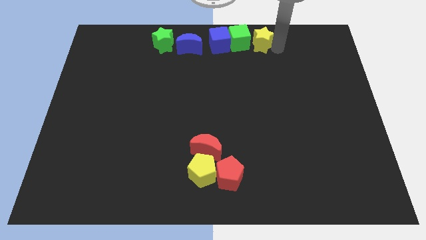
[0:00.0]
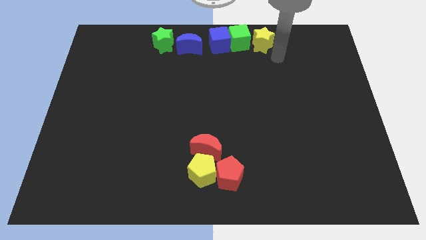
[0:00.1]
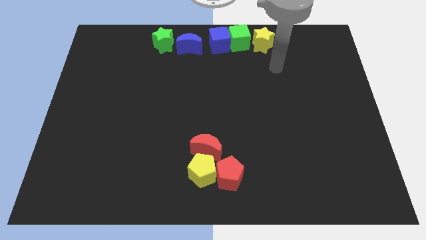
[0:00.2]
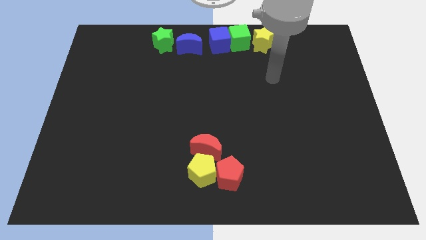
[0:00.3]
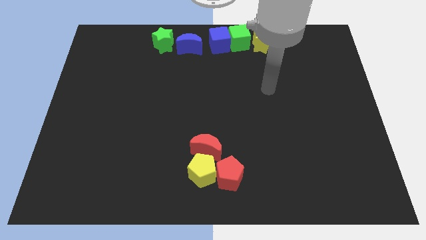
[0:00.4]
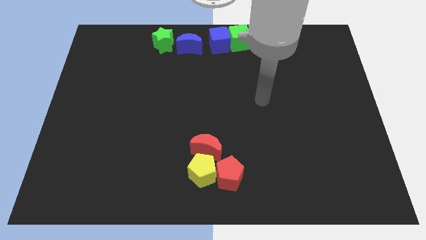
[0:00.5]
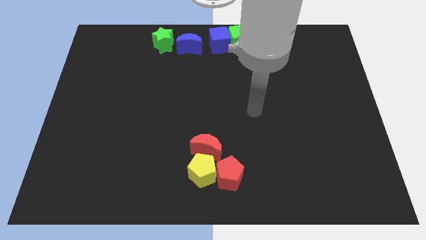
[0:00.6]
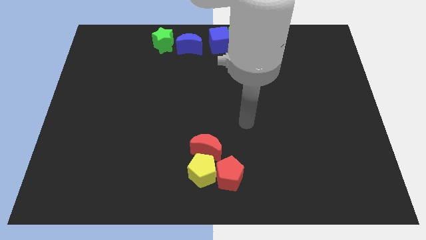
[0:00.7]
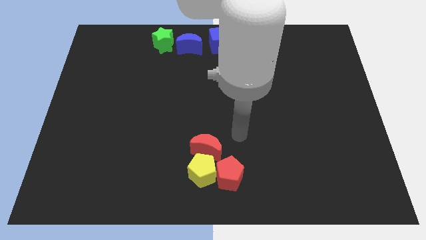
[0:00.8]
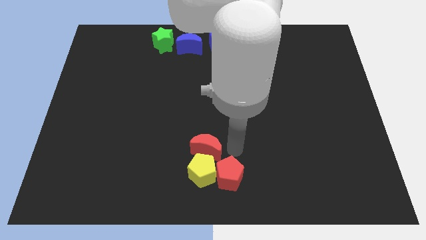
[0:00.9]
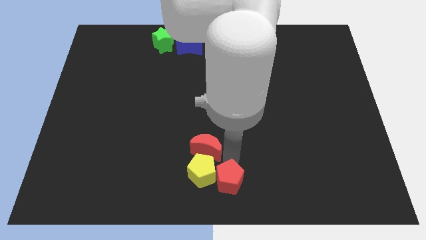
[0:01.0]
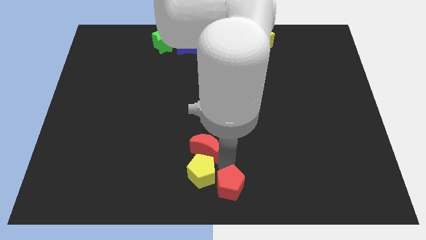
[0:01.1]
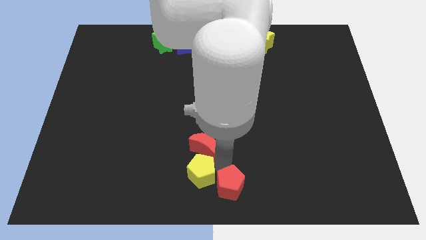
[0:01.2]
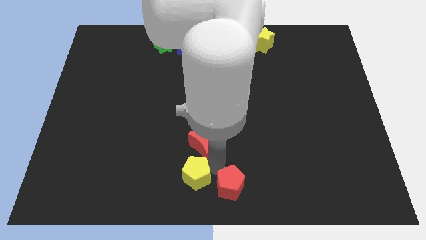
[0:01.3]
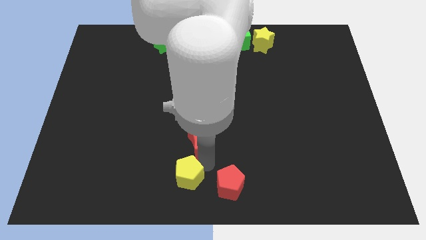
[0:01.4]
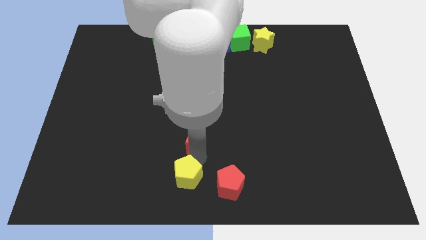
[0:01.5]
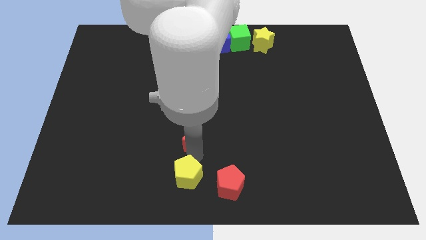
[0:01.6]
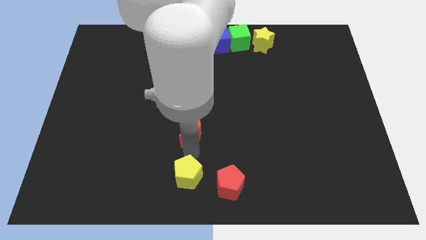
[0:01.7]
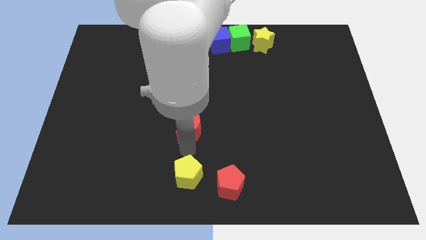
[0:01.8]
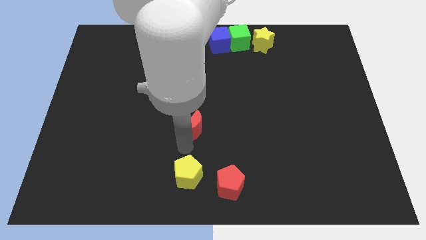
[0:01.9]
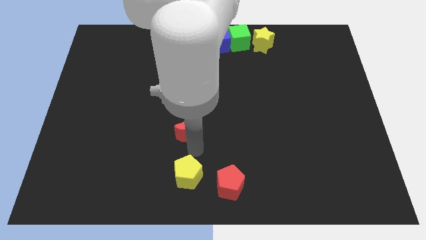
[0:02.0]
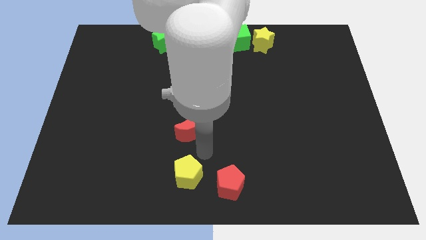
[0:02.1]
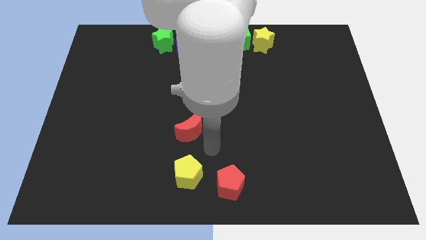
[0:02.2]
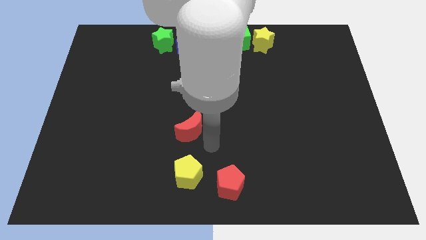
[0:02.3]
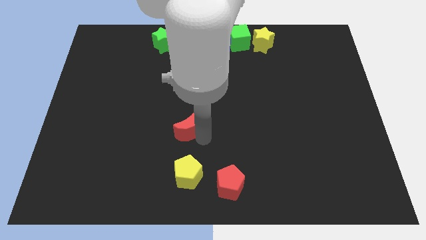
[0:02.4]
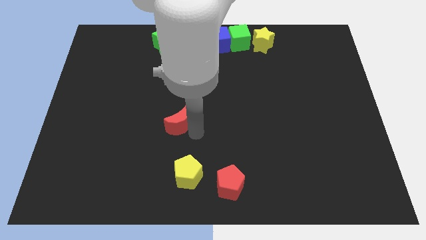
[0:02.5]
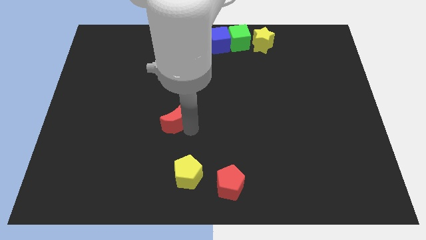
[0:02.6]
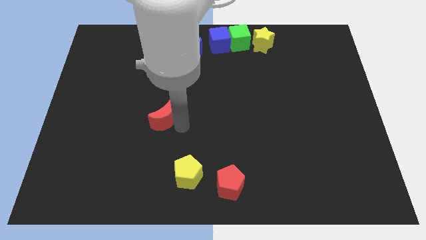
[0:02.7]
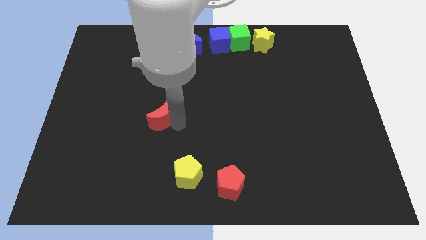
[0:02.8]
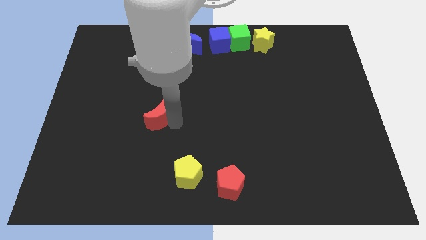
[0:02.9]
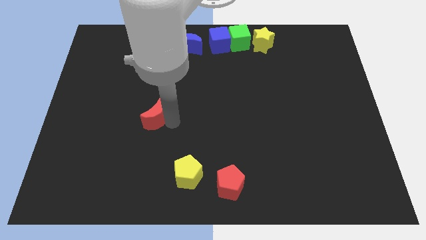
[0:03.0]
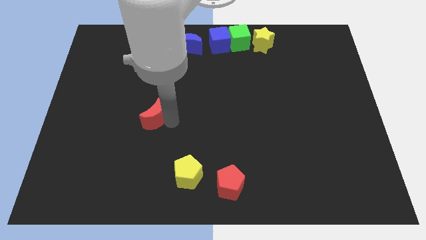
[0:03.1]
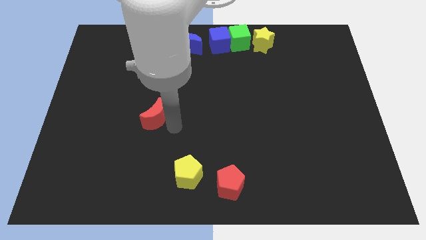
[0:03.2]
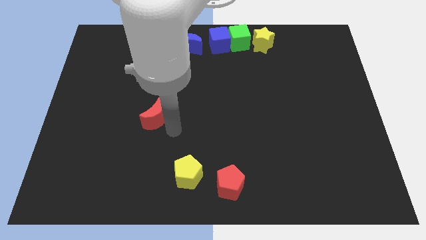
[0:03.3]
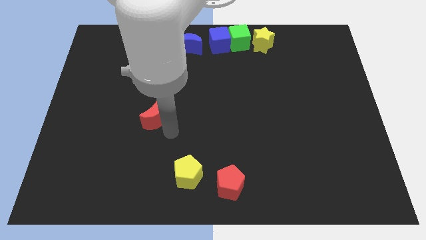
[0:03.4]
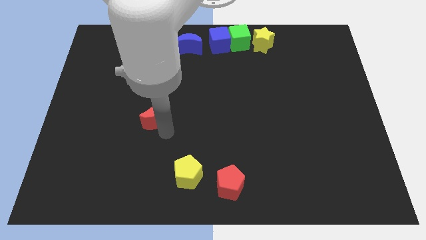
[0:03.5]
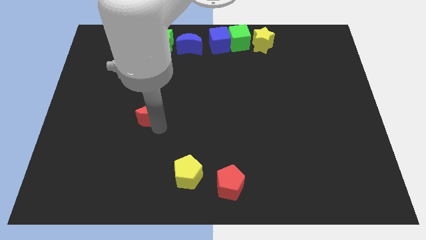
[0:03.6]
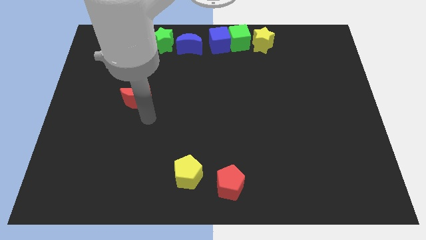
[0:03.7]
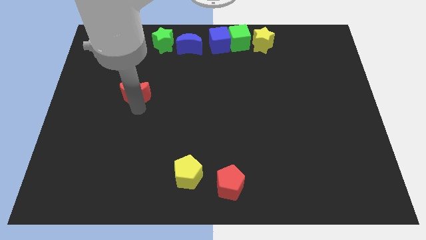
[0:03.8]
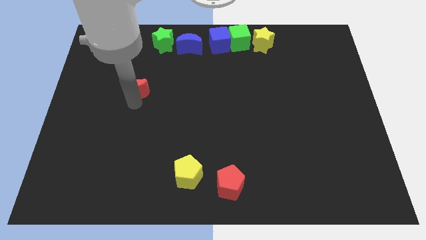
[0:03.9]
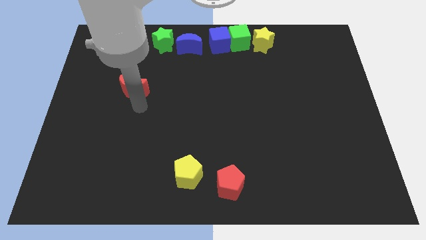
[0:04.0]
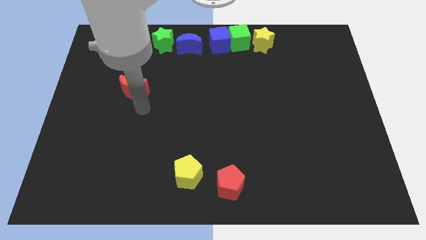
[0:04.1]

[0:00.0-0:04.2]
move the red crescent away from the group of blocks

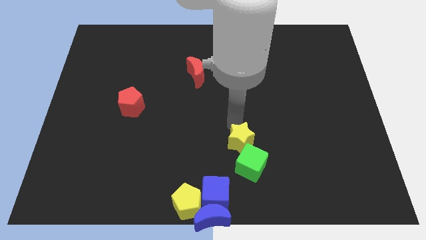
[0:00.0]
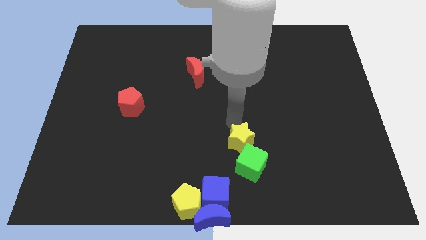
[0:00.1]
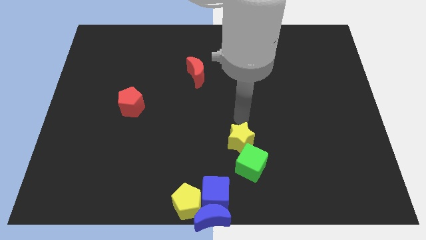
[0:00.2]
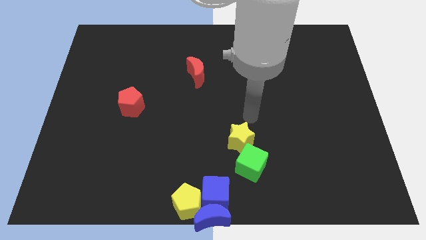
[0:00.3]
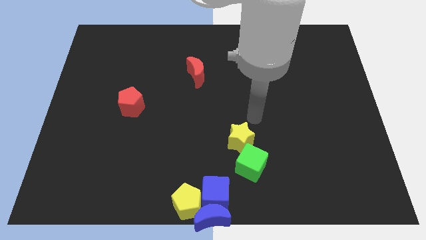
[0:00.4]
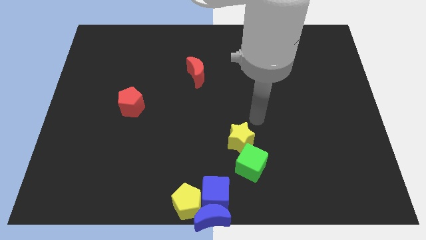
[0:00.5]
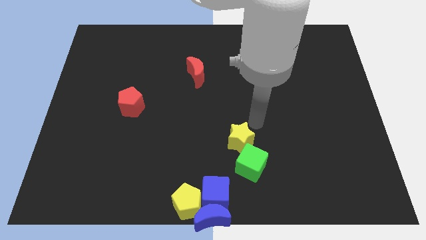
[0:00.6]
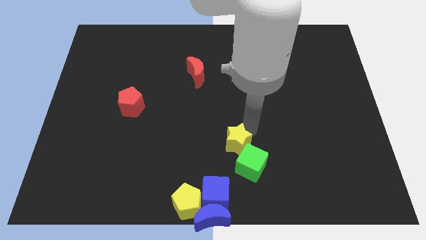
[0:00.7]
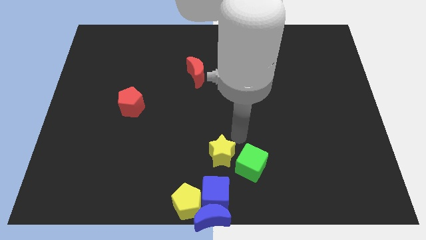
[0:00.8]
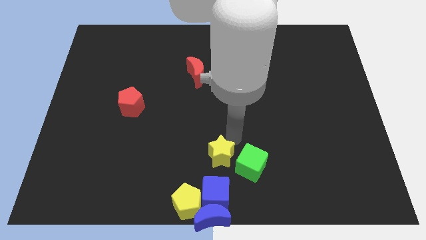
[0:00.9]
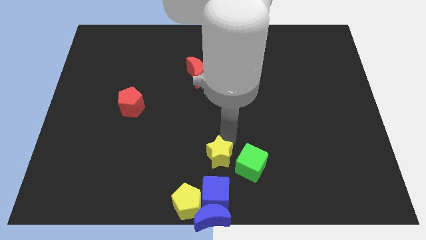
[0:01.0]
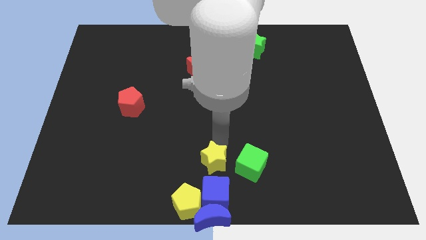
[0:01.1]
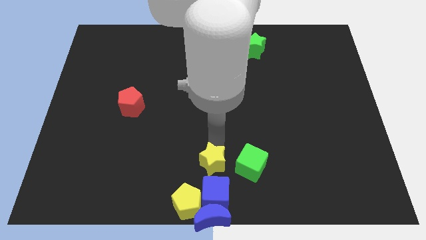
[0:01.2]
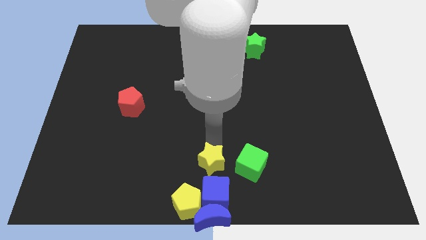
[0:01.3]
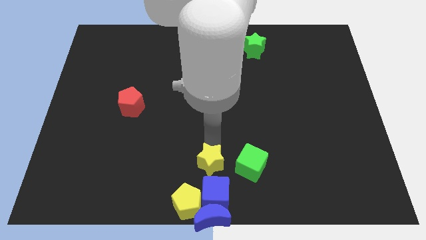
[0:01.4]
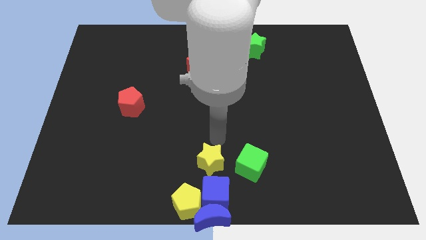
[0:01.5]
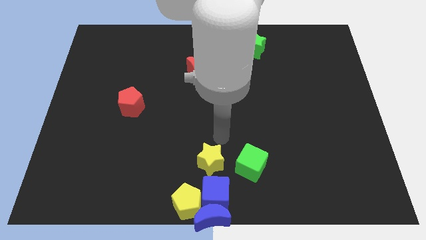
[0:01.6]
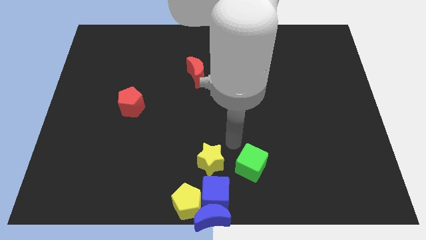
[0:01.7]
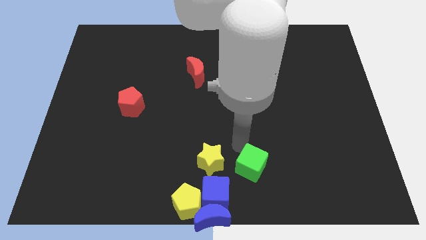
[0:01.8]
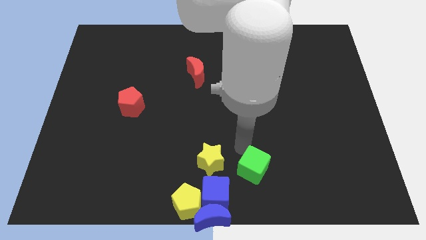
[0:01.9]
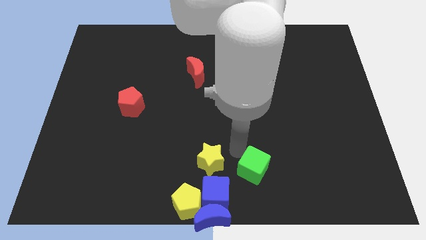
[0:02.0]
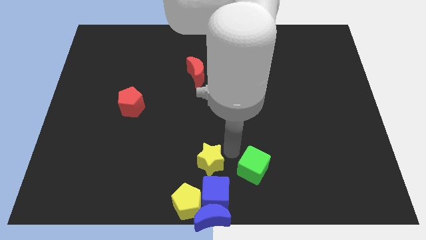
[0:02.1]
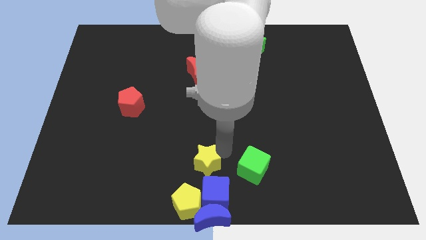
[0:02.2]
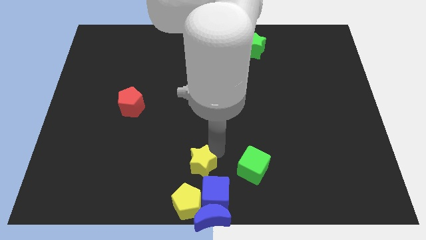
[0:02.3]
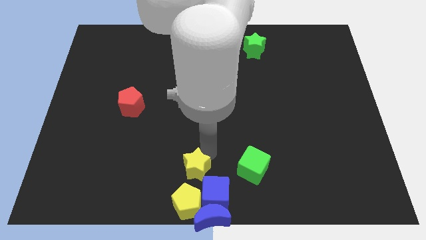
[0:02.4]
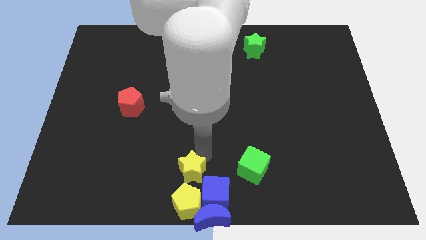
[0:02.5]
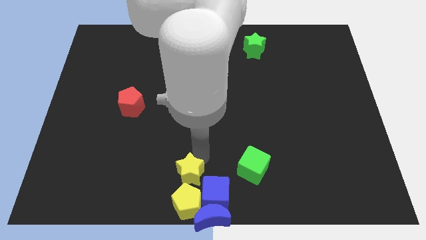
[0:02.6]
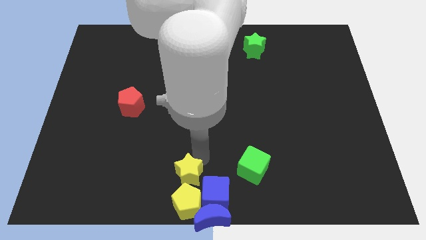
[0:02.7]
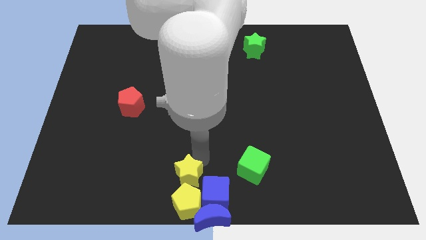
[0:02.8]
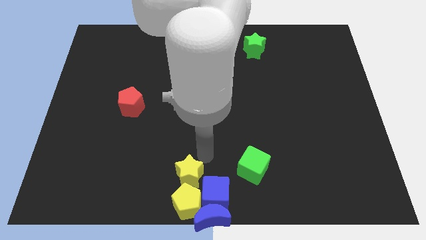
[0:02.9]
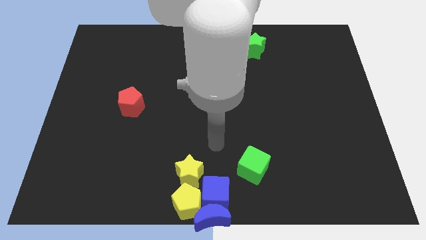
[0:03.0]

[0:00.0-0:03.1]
move the yellow star to the top of the yellow pentagon

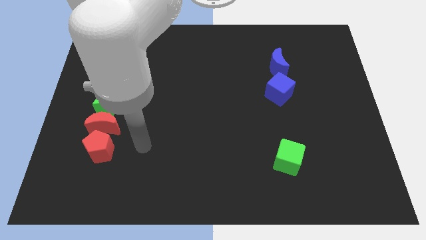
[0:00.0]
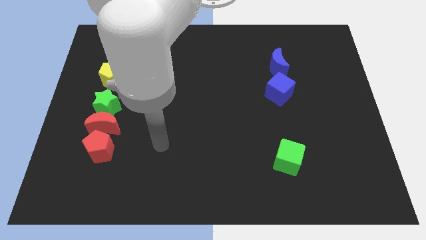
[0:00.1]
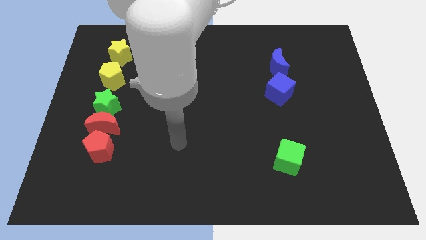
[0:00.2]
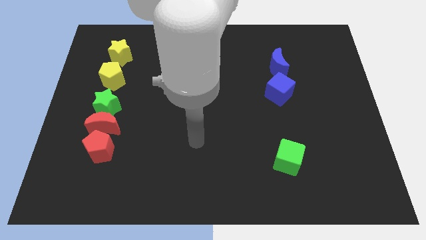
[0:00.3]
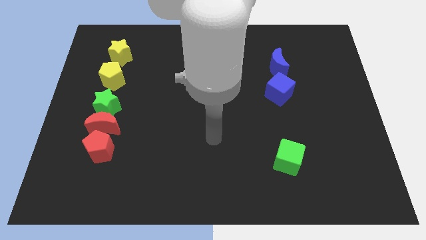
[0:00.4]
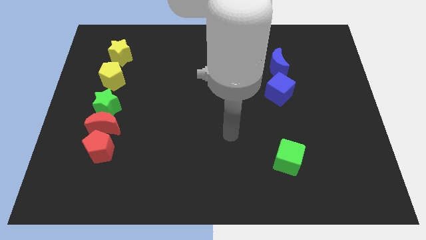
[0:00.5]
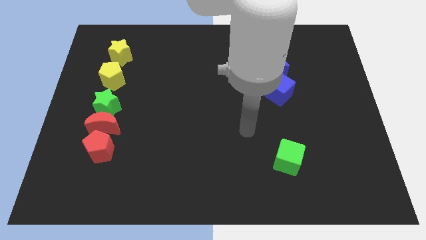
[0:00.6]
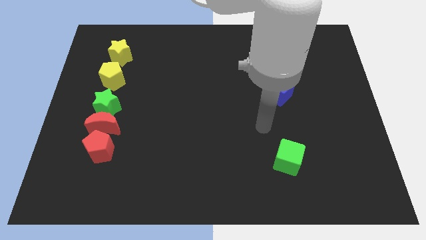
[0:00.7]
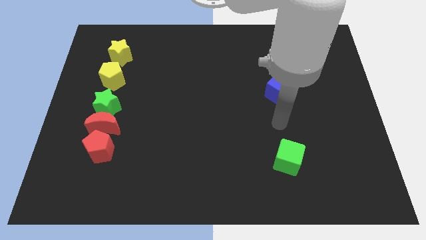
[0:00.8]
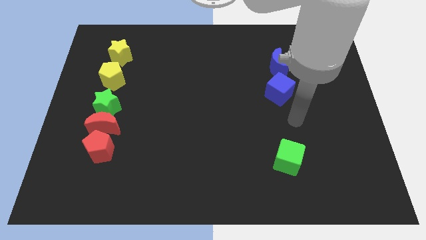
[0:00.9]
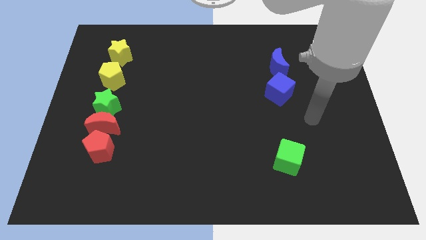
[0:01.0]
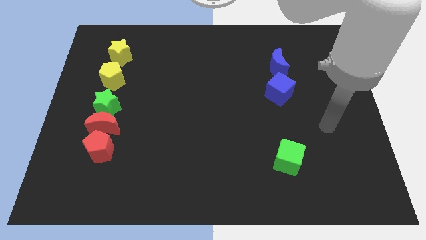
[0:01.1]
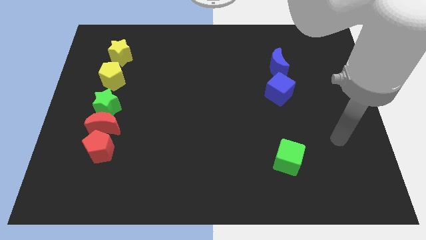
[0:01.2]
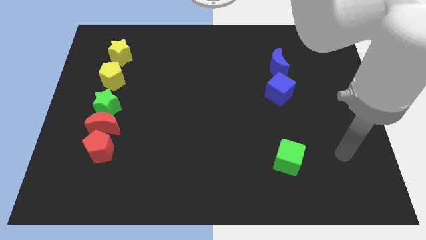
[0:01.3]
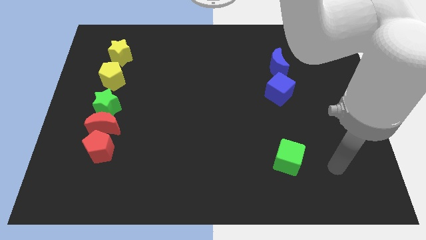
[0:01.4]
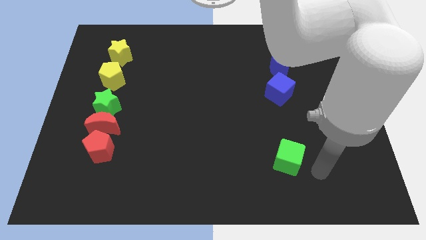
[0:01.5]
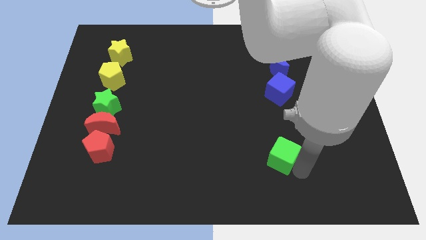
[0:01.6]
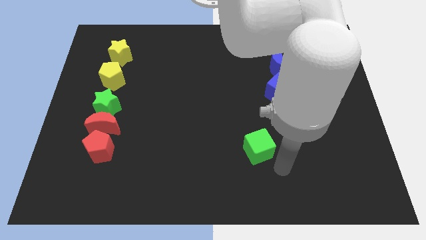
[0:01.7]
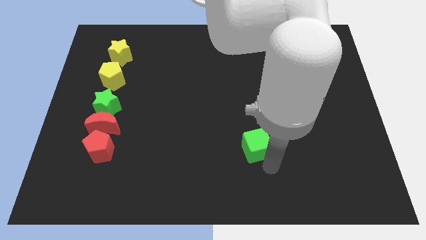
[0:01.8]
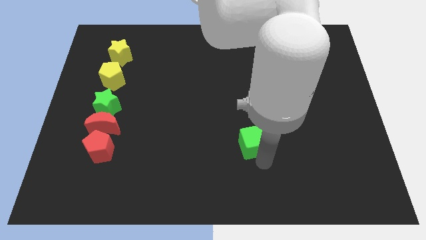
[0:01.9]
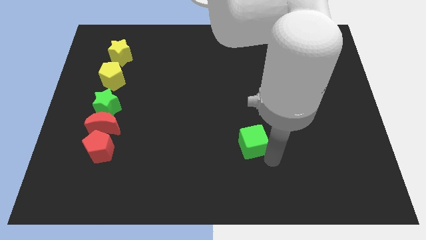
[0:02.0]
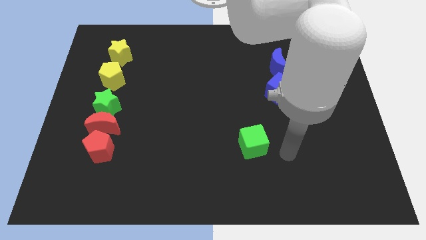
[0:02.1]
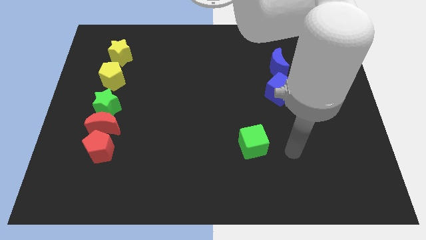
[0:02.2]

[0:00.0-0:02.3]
move your arm close to the green cube
